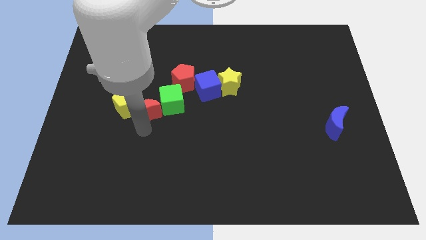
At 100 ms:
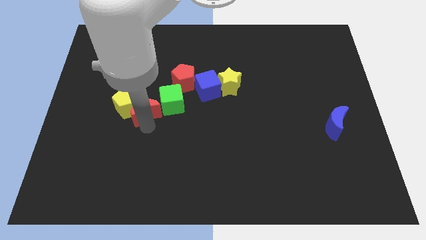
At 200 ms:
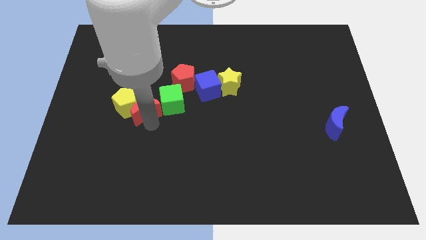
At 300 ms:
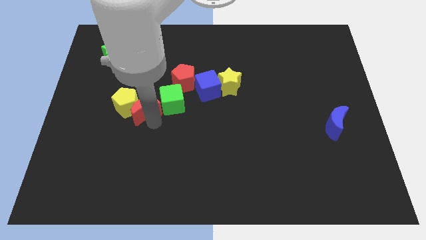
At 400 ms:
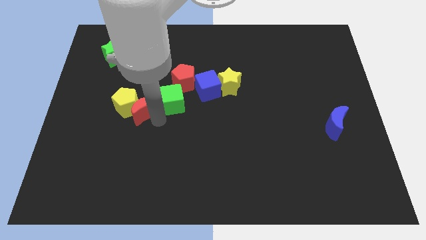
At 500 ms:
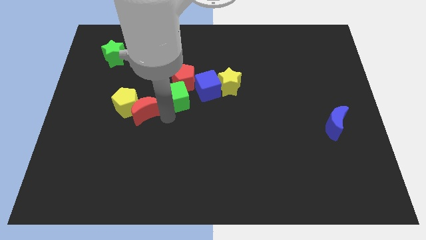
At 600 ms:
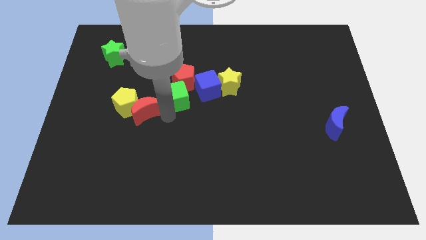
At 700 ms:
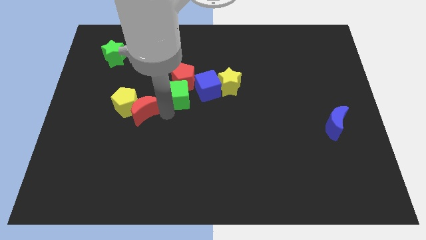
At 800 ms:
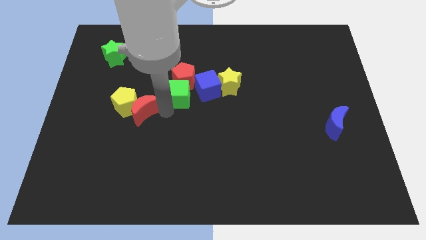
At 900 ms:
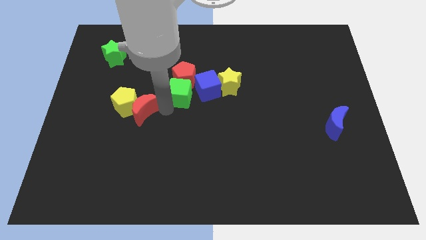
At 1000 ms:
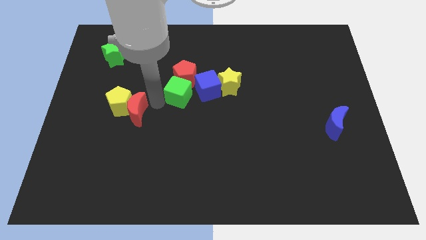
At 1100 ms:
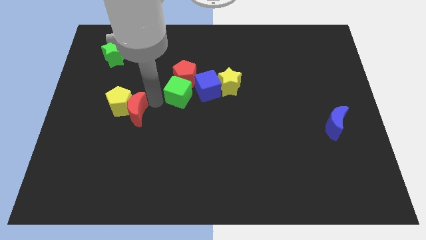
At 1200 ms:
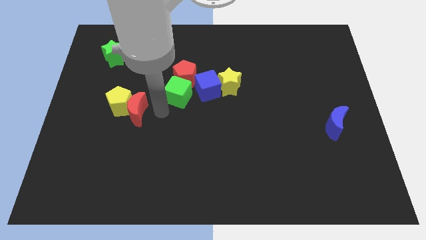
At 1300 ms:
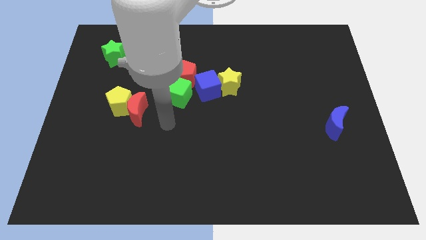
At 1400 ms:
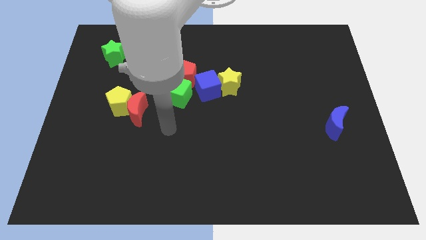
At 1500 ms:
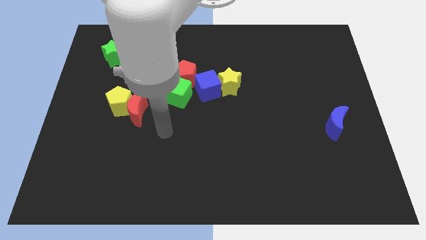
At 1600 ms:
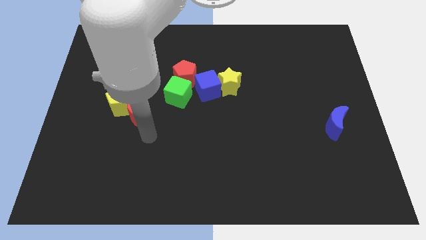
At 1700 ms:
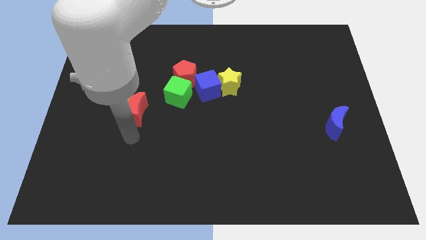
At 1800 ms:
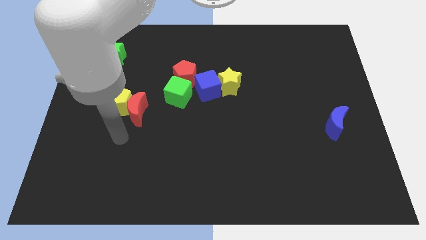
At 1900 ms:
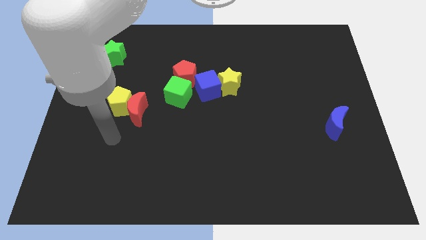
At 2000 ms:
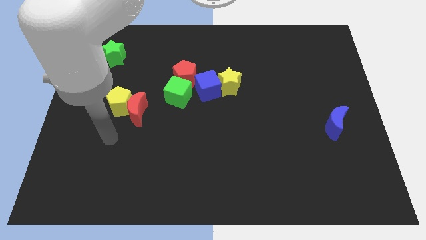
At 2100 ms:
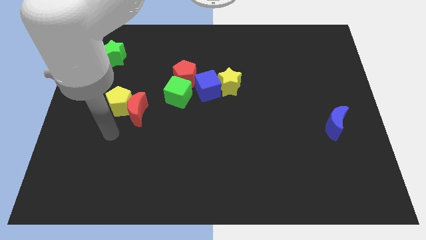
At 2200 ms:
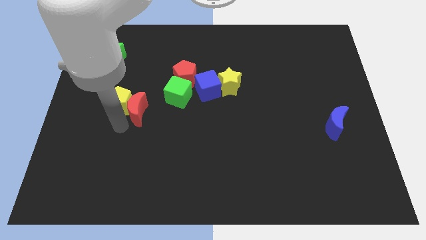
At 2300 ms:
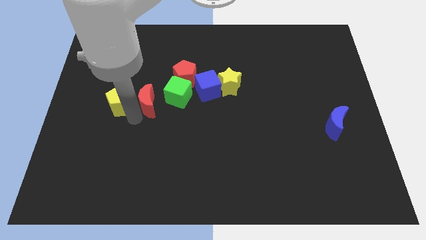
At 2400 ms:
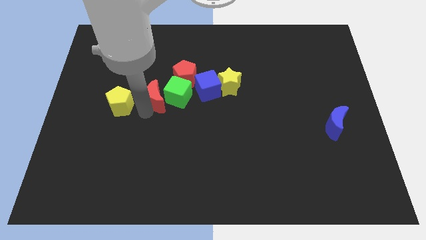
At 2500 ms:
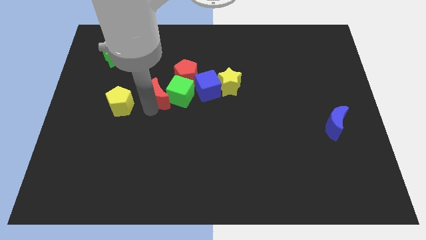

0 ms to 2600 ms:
separate red moon from yellow pentagon

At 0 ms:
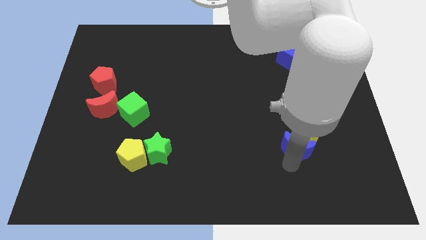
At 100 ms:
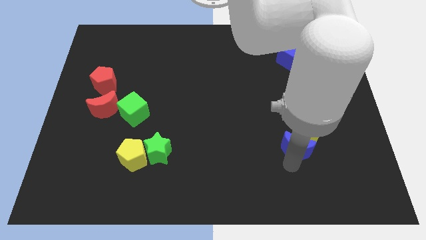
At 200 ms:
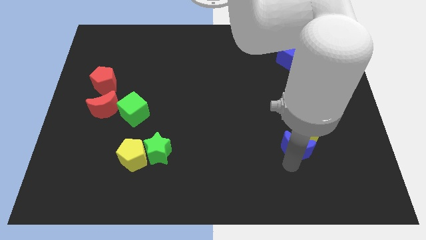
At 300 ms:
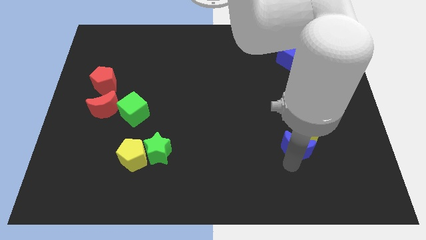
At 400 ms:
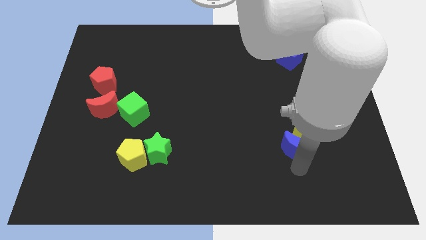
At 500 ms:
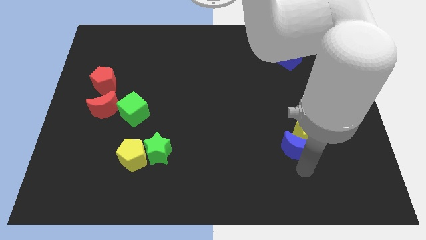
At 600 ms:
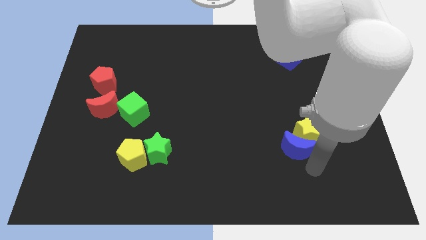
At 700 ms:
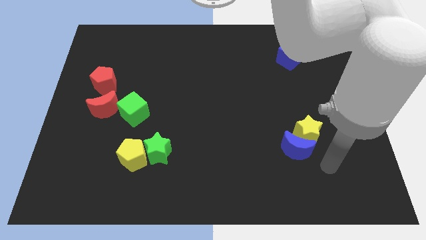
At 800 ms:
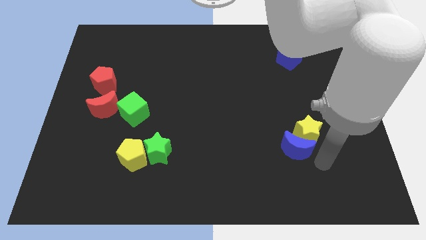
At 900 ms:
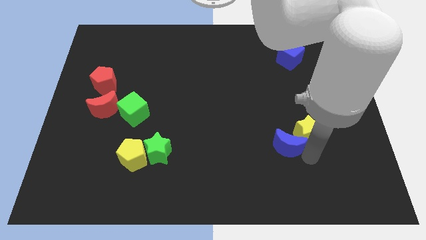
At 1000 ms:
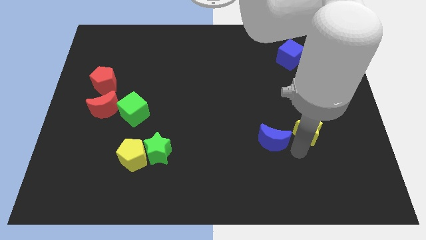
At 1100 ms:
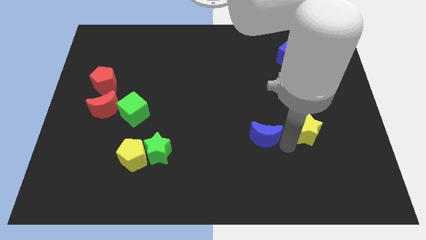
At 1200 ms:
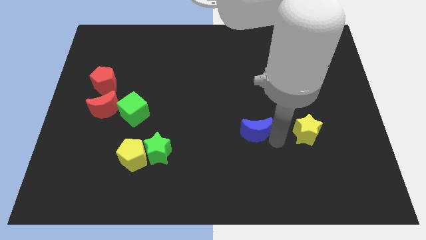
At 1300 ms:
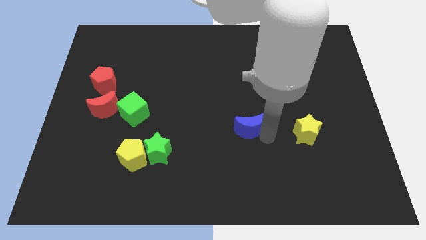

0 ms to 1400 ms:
separate the blue moon from the yellow star

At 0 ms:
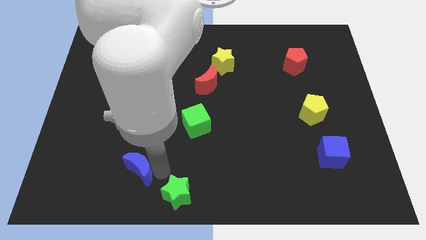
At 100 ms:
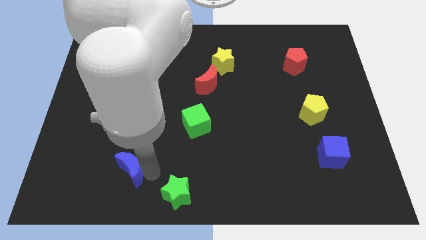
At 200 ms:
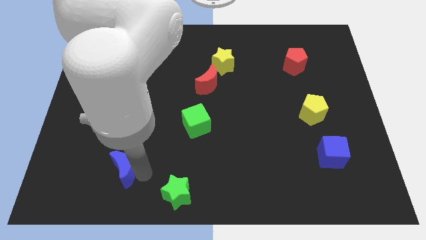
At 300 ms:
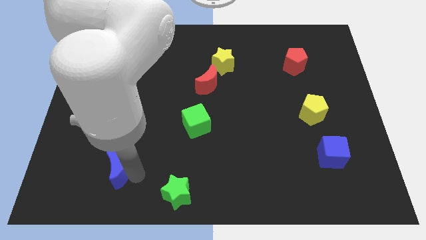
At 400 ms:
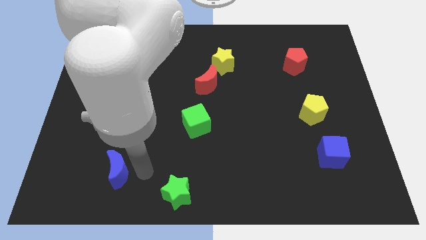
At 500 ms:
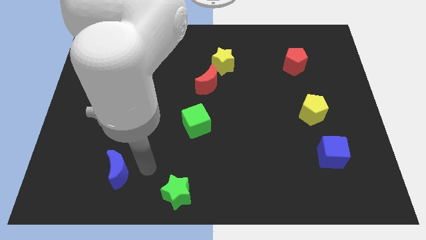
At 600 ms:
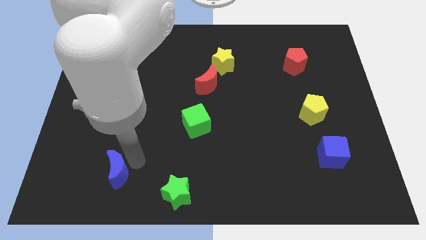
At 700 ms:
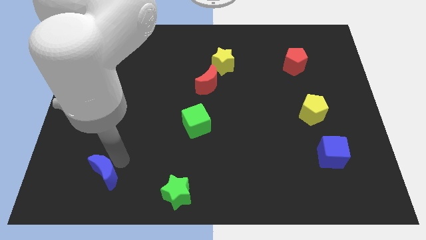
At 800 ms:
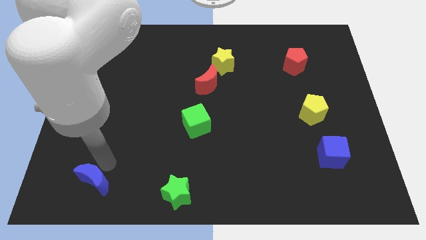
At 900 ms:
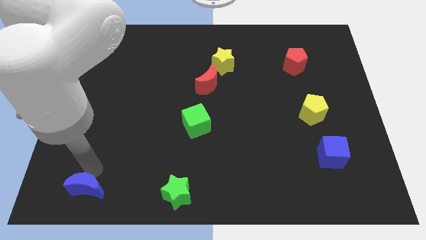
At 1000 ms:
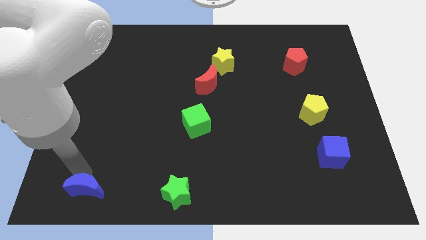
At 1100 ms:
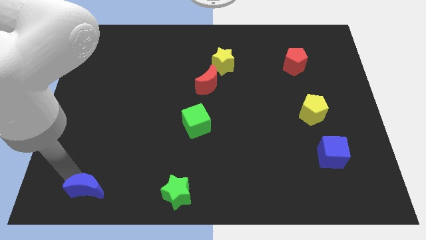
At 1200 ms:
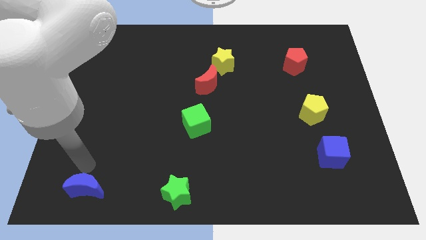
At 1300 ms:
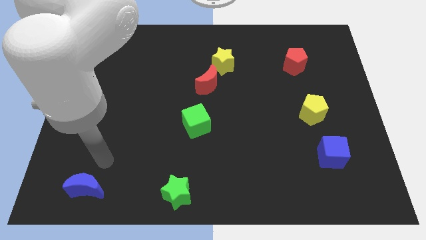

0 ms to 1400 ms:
place the blue crescent horizontally to the left side of the green star

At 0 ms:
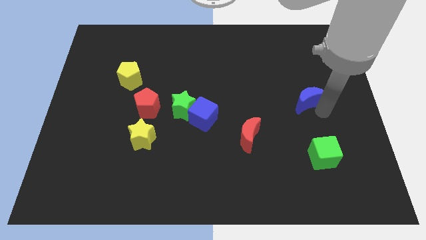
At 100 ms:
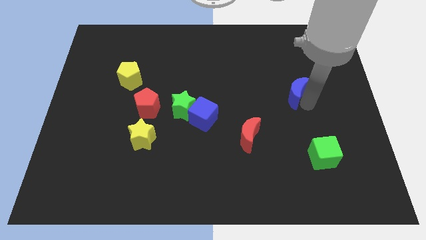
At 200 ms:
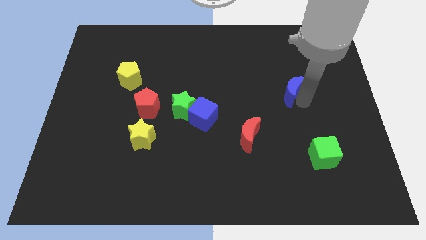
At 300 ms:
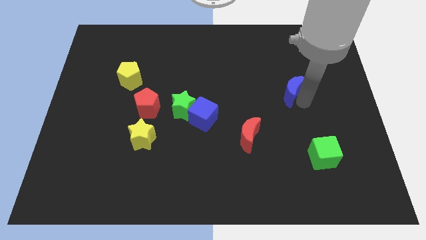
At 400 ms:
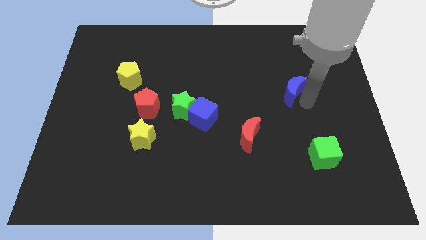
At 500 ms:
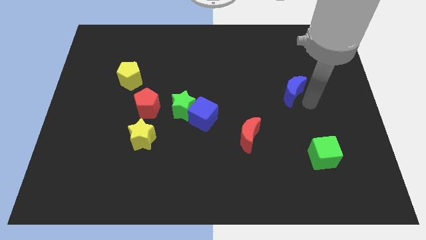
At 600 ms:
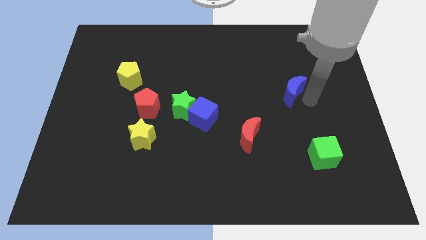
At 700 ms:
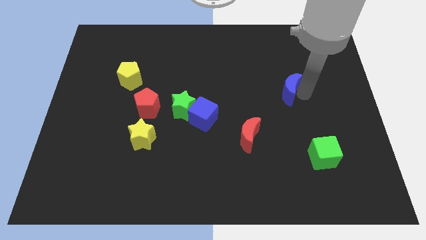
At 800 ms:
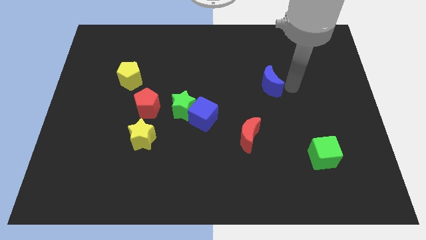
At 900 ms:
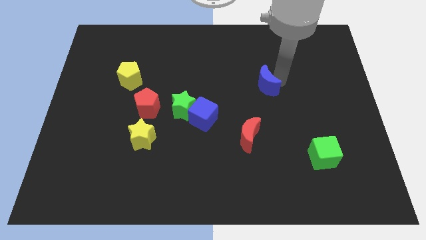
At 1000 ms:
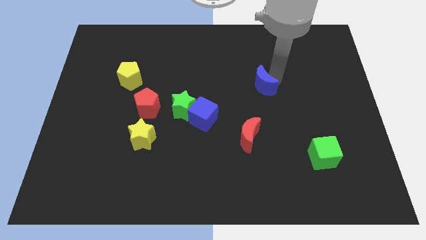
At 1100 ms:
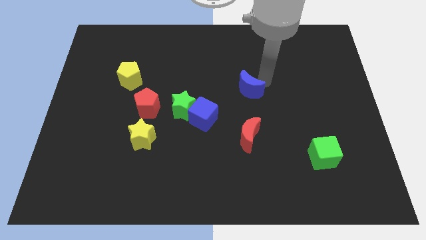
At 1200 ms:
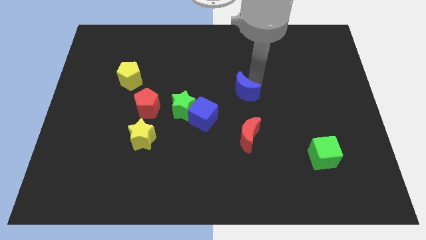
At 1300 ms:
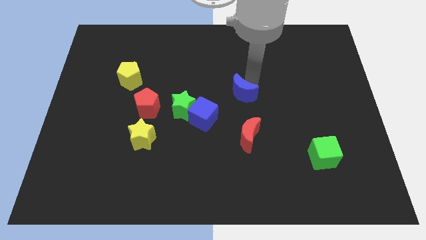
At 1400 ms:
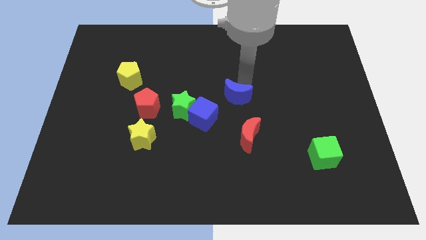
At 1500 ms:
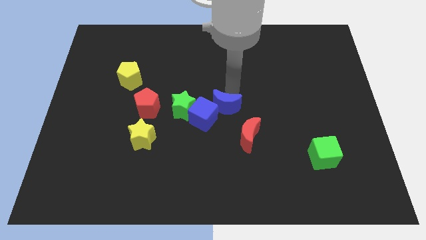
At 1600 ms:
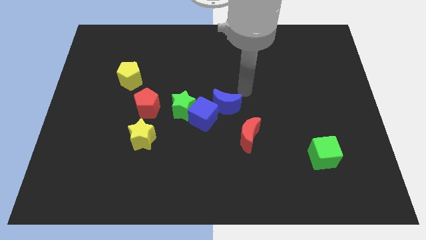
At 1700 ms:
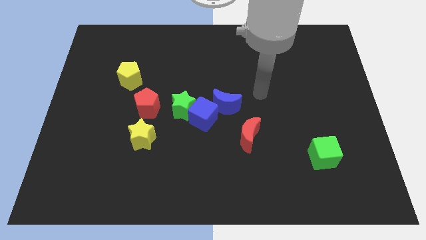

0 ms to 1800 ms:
push the blue crescent to the centre of the board

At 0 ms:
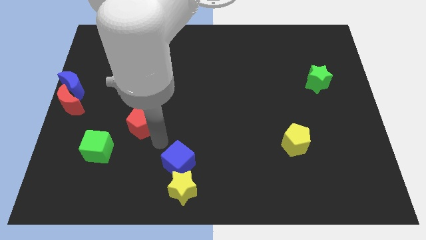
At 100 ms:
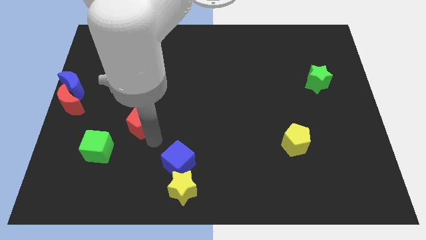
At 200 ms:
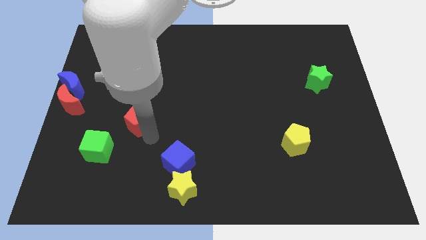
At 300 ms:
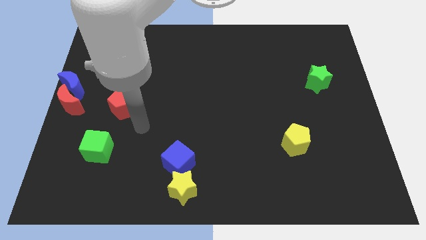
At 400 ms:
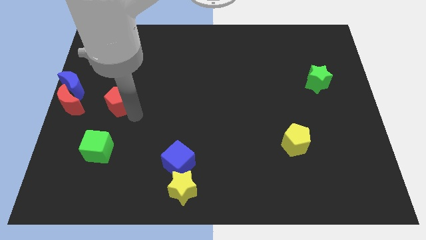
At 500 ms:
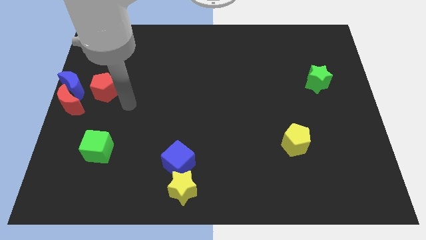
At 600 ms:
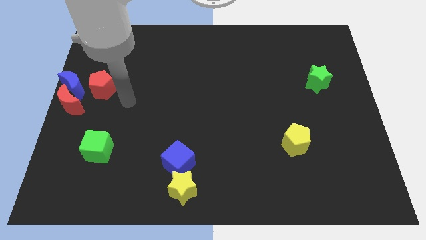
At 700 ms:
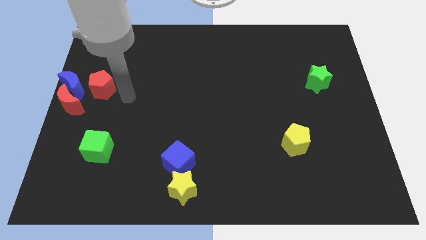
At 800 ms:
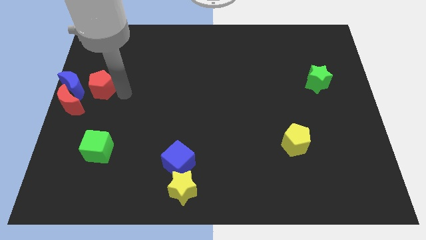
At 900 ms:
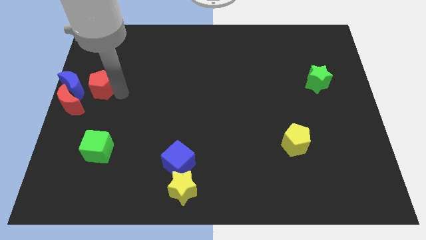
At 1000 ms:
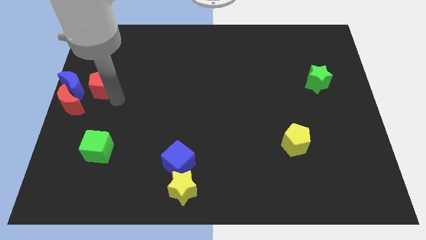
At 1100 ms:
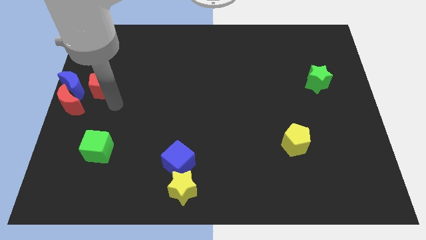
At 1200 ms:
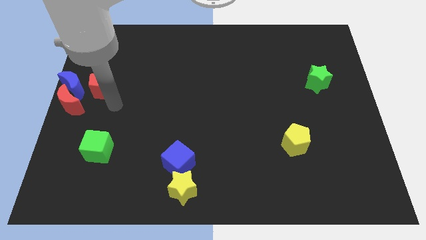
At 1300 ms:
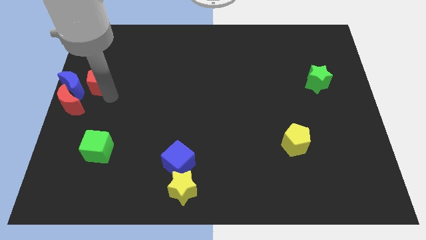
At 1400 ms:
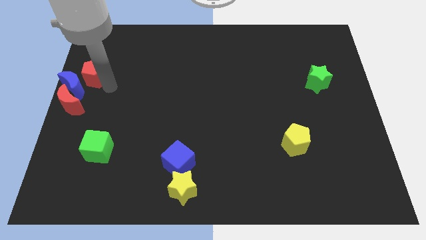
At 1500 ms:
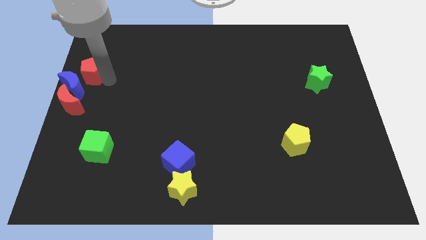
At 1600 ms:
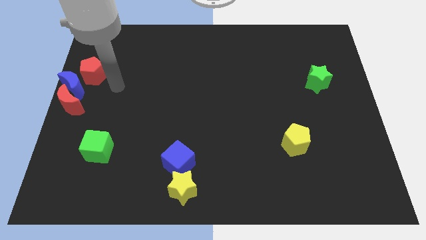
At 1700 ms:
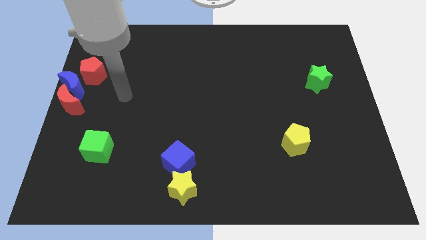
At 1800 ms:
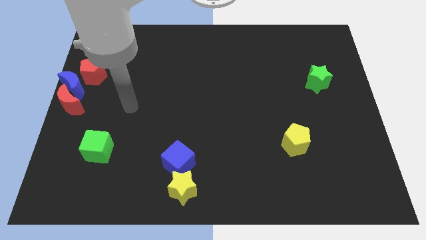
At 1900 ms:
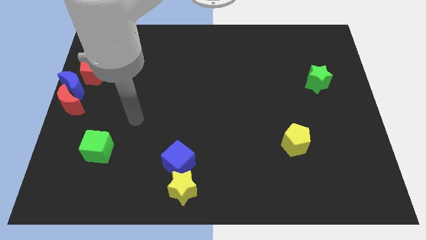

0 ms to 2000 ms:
push the red pentagon diagonally to the top right of the blue crescent
